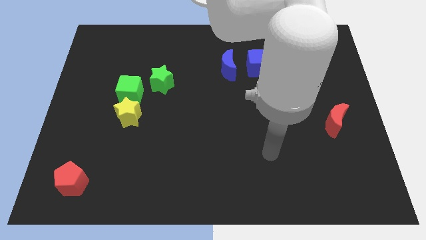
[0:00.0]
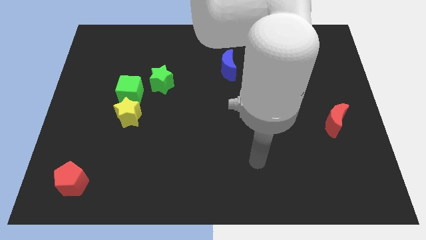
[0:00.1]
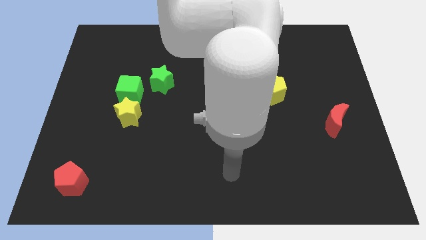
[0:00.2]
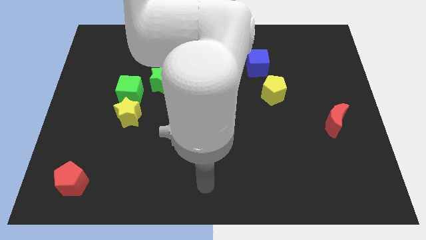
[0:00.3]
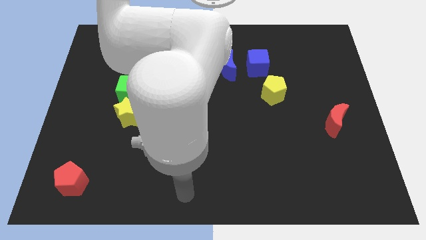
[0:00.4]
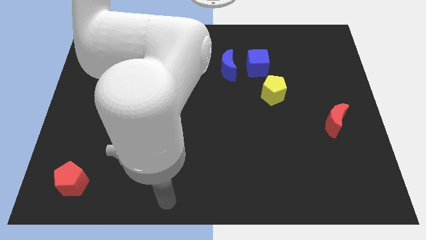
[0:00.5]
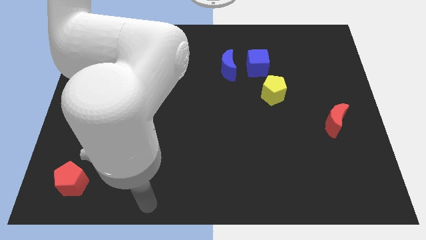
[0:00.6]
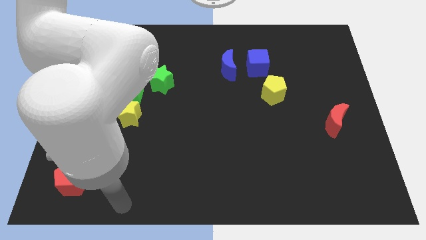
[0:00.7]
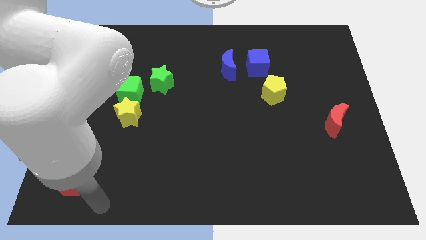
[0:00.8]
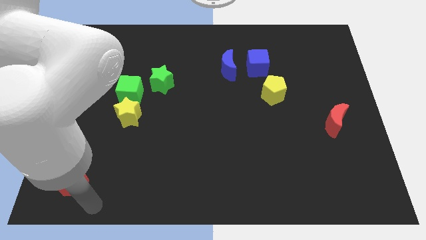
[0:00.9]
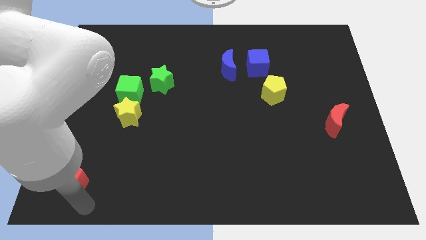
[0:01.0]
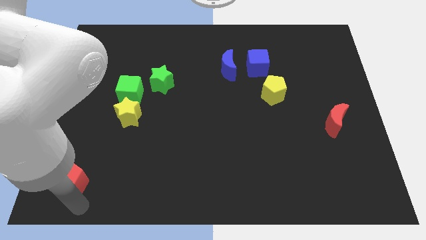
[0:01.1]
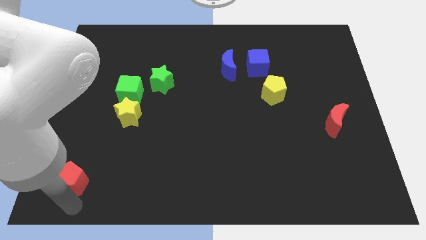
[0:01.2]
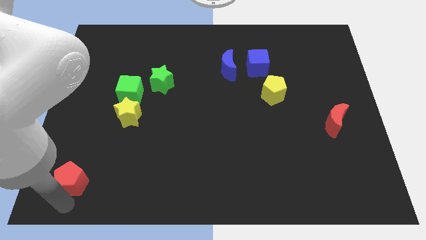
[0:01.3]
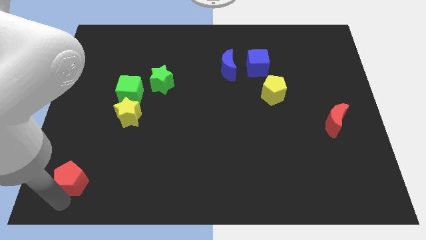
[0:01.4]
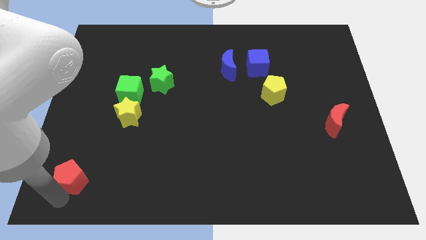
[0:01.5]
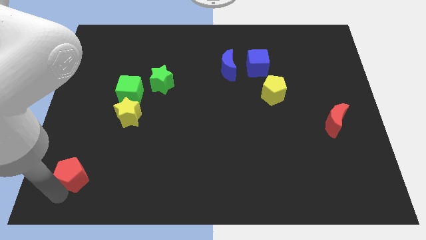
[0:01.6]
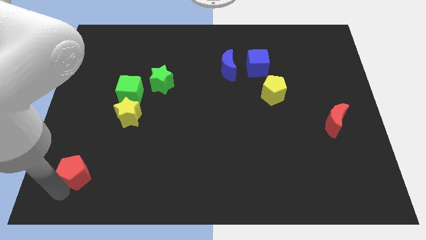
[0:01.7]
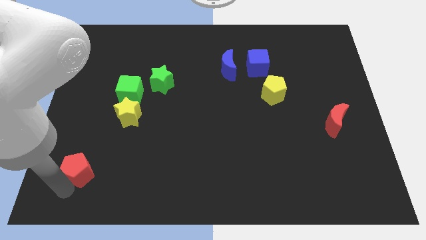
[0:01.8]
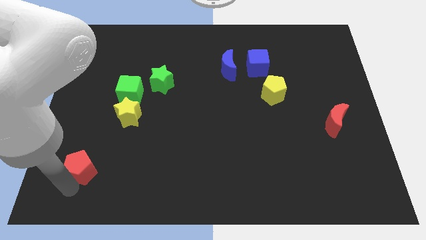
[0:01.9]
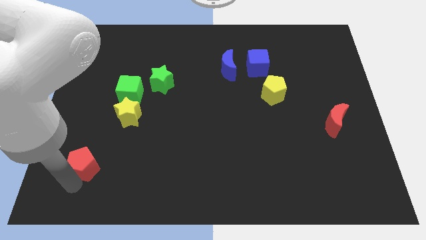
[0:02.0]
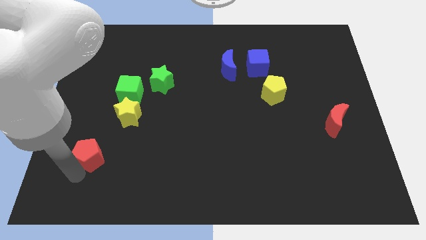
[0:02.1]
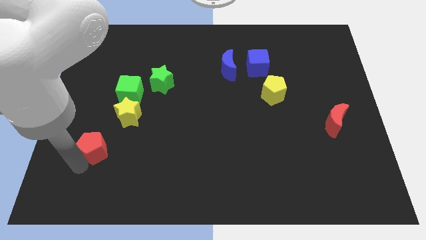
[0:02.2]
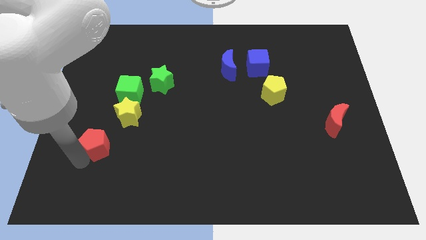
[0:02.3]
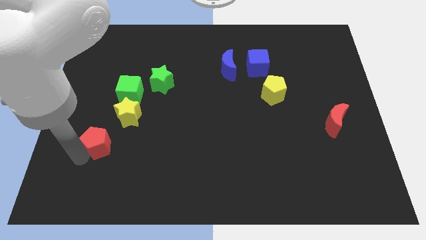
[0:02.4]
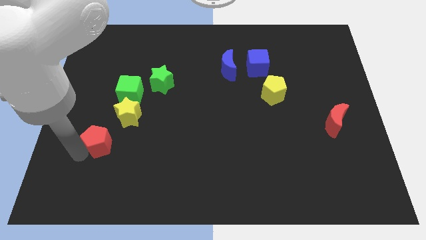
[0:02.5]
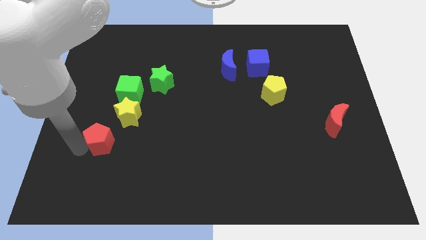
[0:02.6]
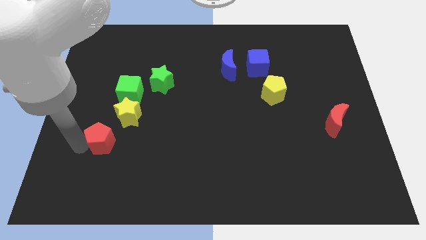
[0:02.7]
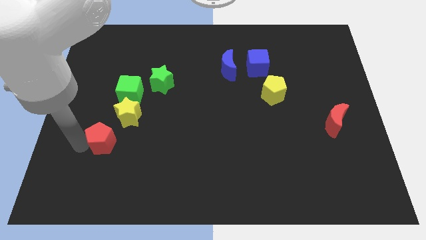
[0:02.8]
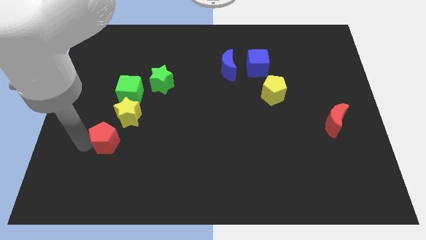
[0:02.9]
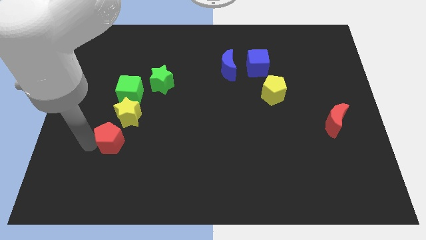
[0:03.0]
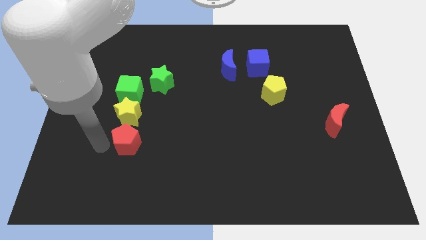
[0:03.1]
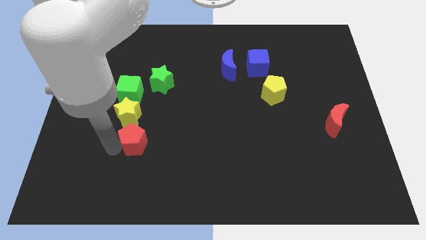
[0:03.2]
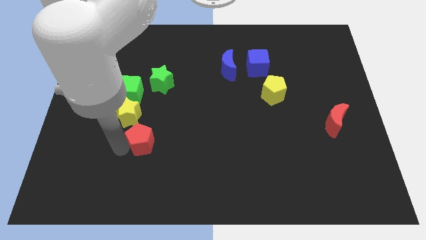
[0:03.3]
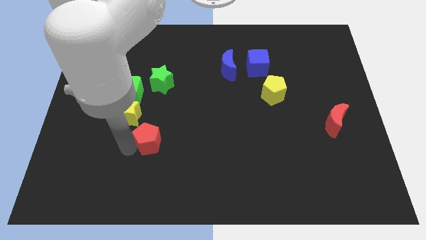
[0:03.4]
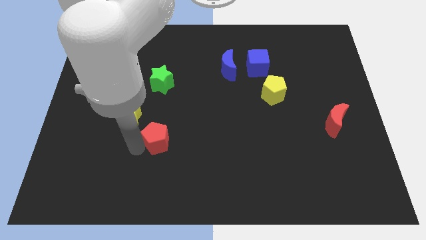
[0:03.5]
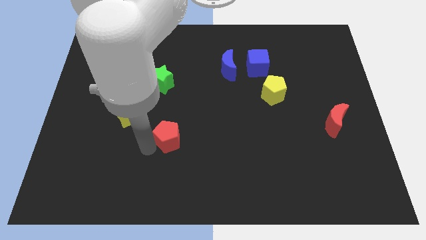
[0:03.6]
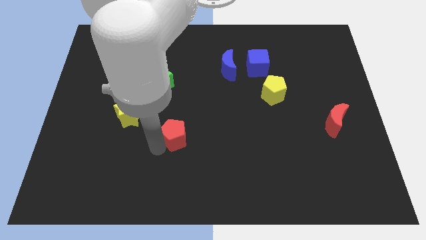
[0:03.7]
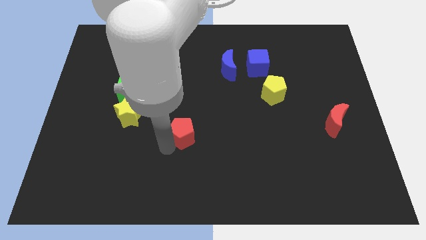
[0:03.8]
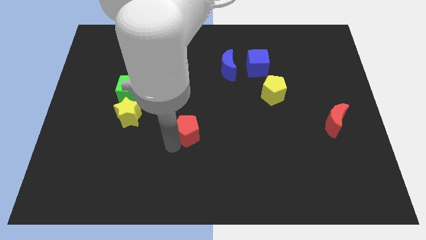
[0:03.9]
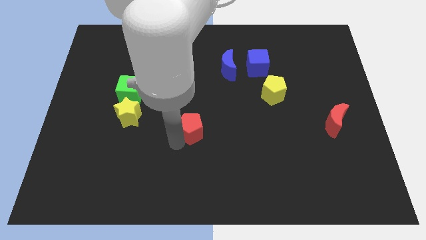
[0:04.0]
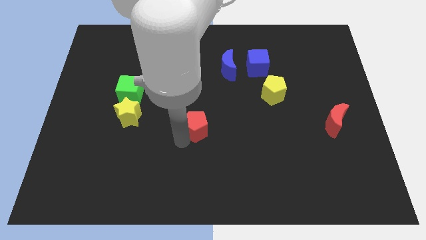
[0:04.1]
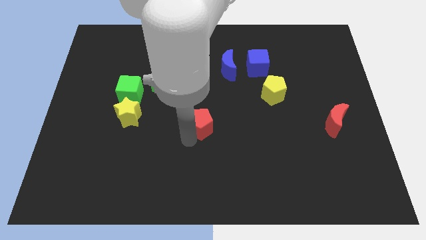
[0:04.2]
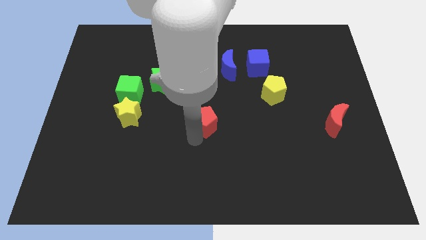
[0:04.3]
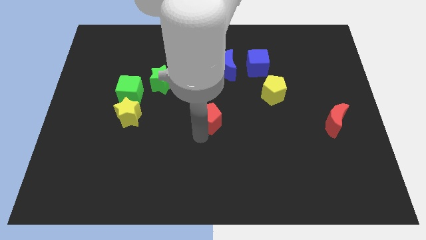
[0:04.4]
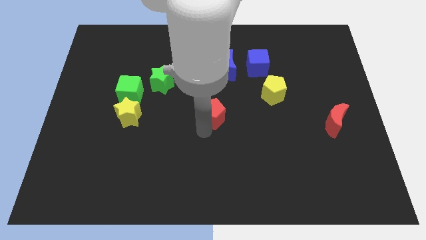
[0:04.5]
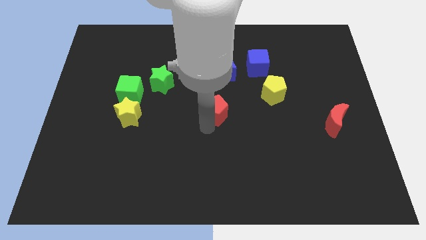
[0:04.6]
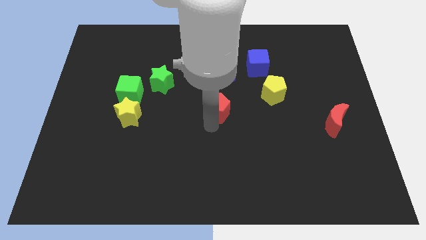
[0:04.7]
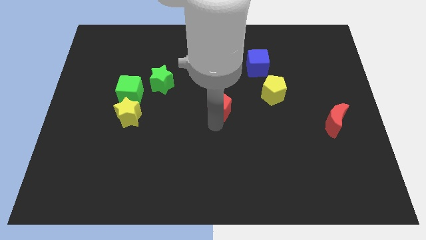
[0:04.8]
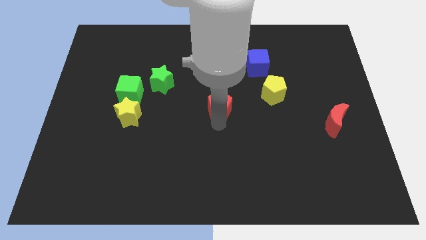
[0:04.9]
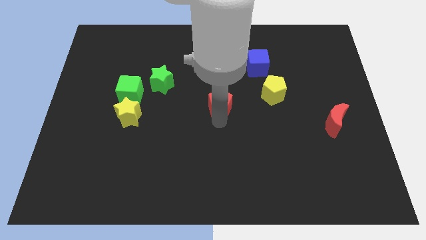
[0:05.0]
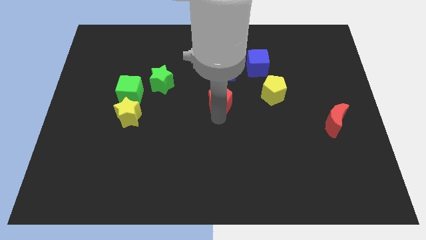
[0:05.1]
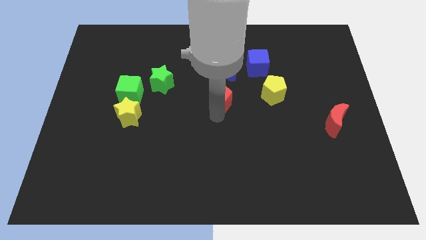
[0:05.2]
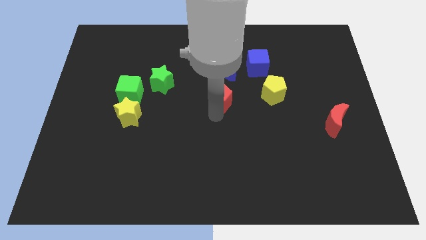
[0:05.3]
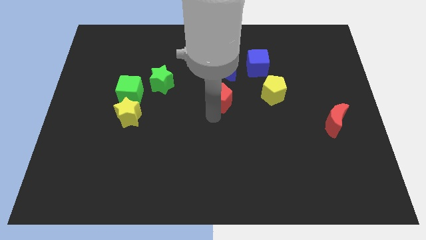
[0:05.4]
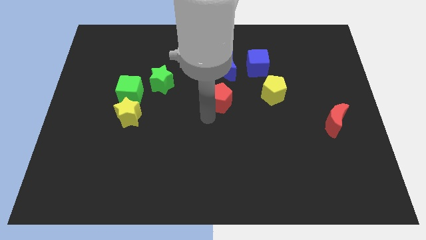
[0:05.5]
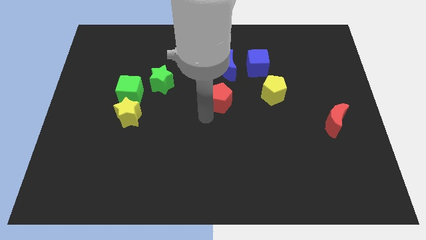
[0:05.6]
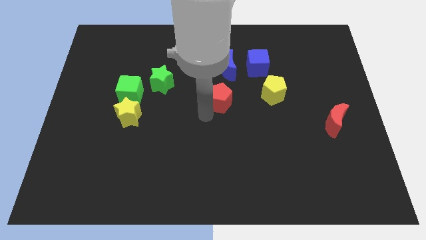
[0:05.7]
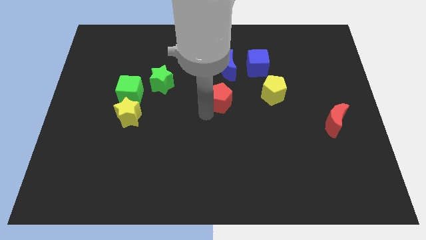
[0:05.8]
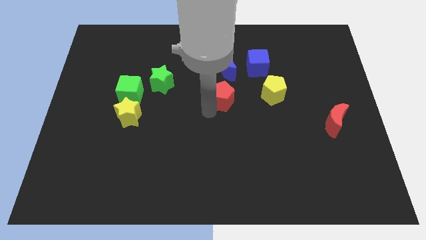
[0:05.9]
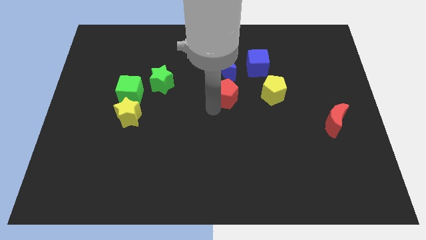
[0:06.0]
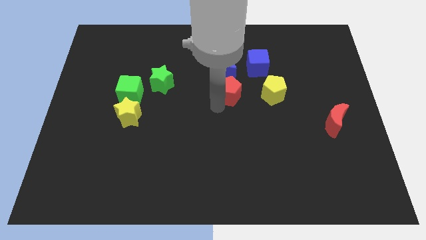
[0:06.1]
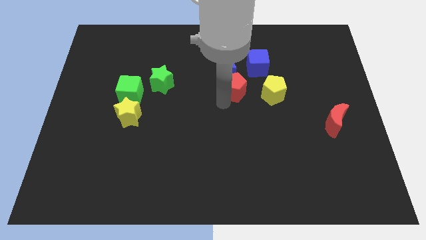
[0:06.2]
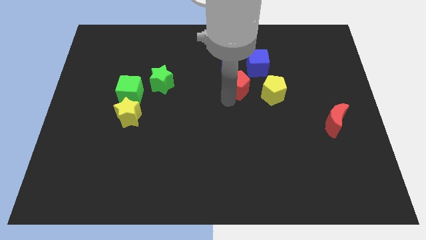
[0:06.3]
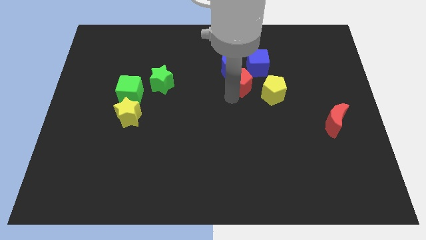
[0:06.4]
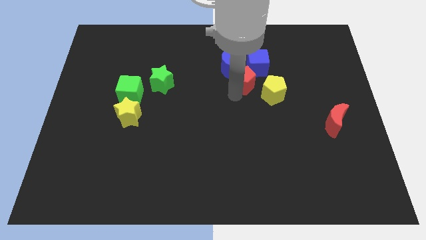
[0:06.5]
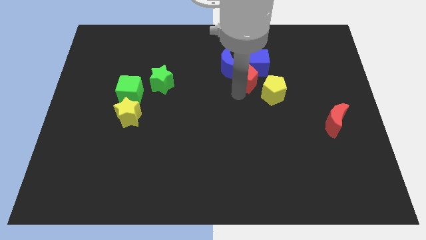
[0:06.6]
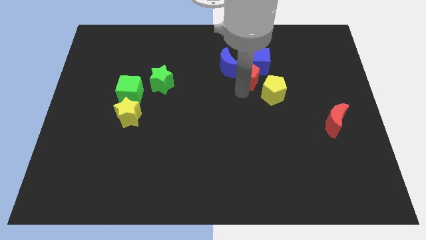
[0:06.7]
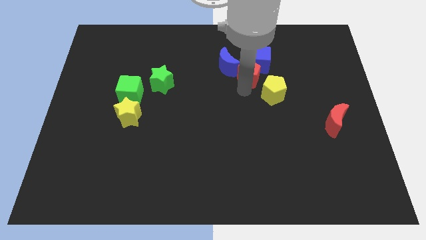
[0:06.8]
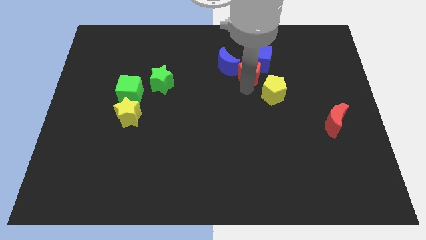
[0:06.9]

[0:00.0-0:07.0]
slide the red pentagon towards the blue cube
